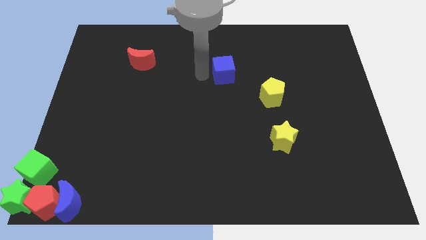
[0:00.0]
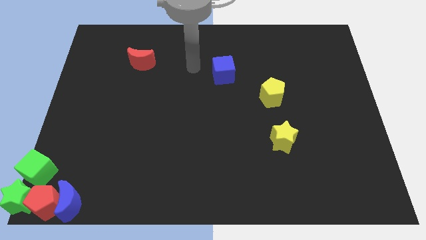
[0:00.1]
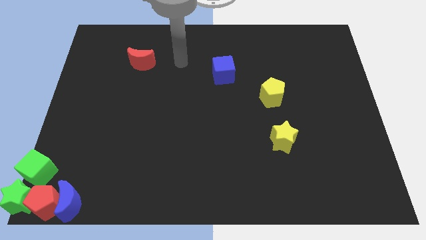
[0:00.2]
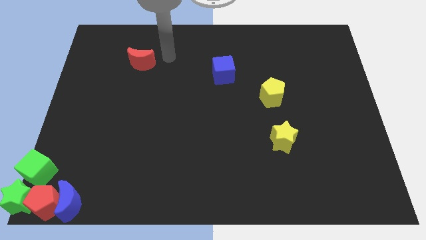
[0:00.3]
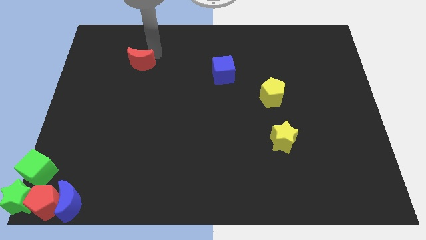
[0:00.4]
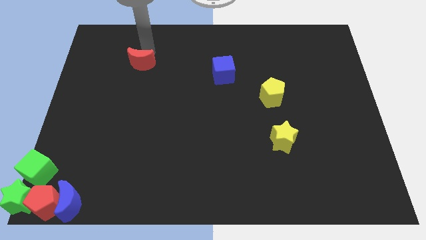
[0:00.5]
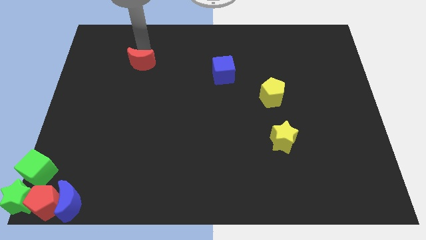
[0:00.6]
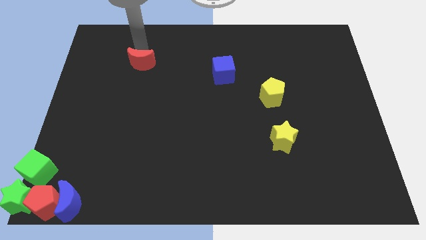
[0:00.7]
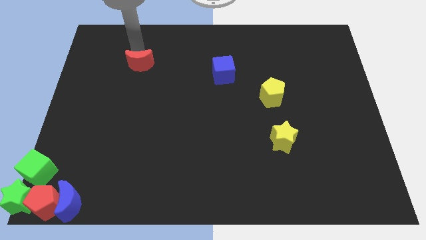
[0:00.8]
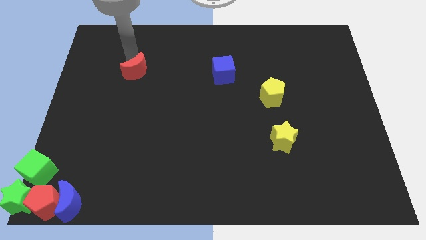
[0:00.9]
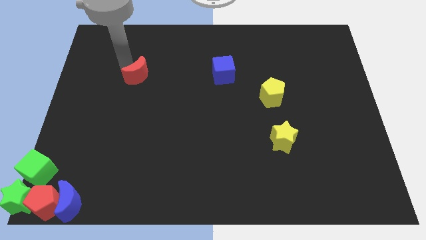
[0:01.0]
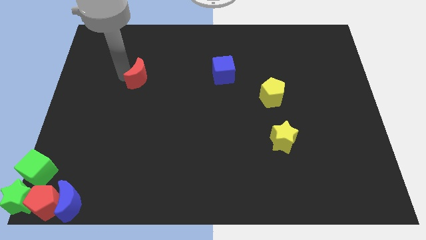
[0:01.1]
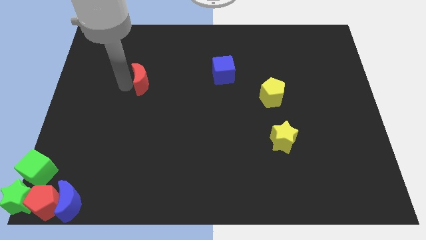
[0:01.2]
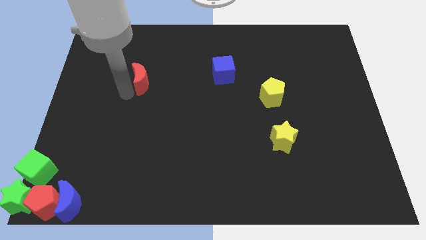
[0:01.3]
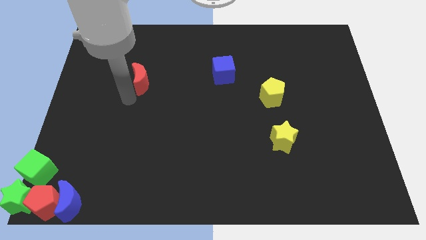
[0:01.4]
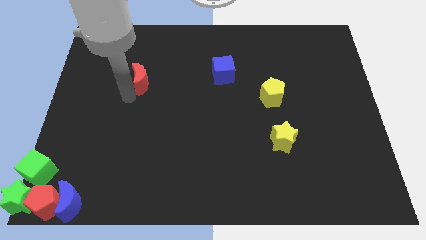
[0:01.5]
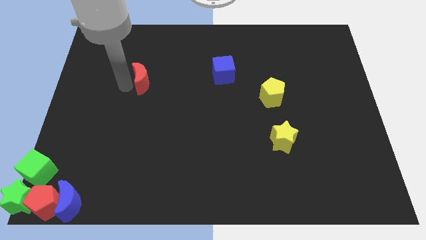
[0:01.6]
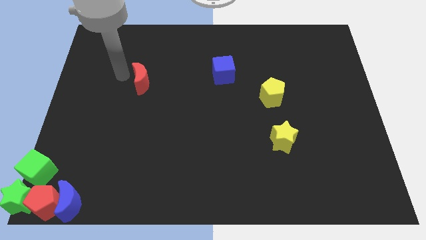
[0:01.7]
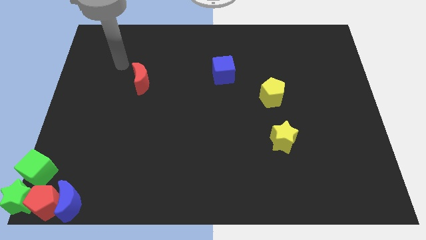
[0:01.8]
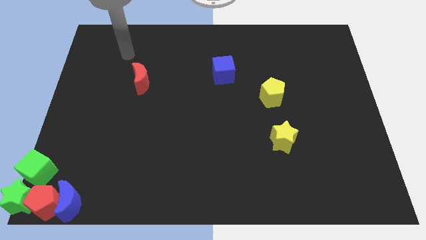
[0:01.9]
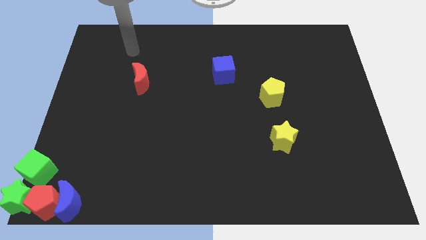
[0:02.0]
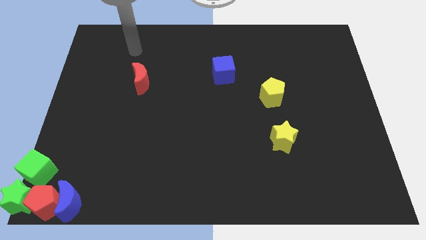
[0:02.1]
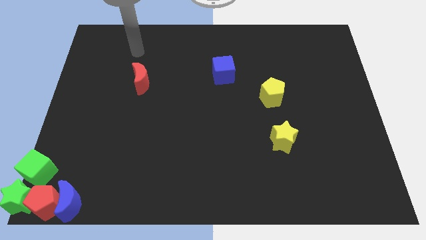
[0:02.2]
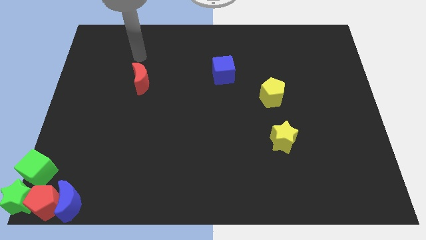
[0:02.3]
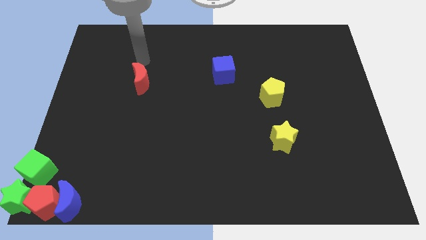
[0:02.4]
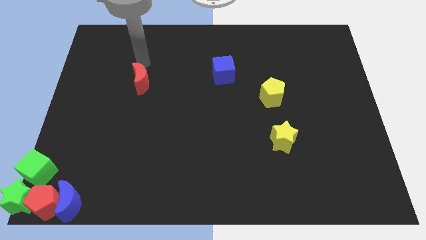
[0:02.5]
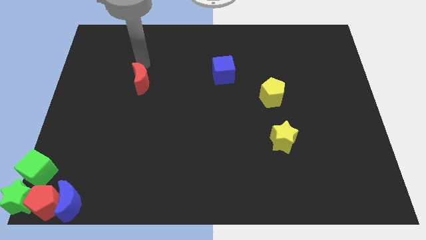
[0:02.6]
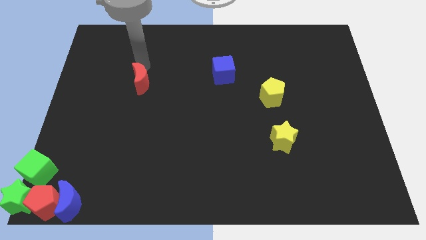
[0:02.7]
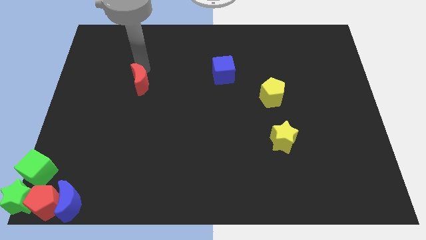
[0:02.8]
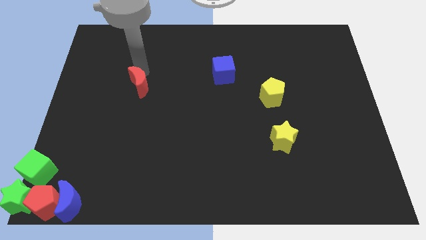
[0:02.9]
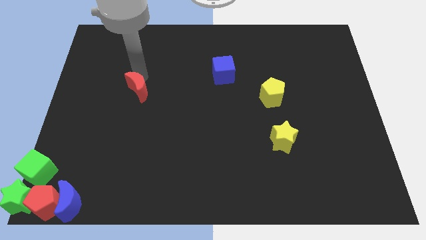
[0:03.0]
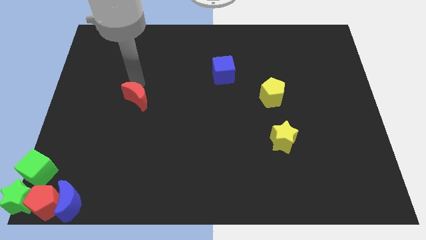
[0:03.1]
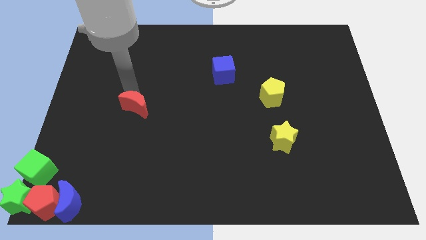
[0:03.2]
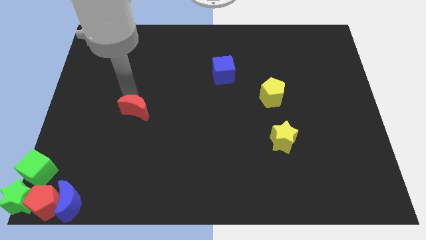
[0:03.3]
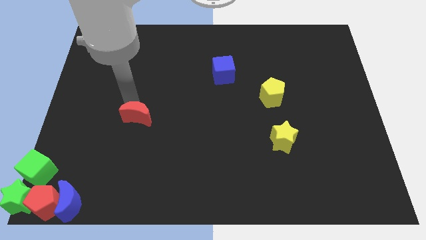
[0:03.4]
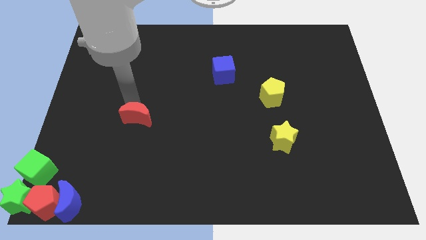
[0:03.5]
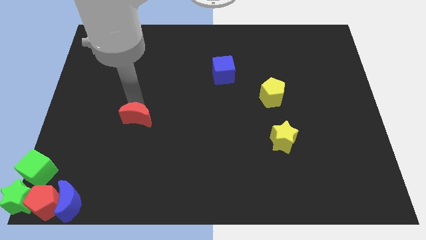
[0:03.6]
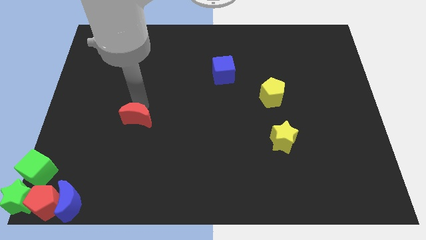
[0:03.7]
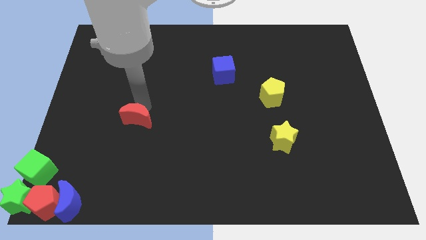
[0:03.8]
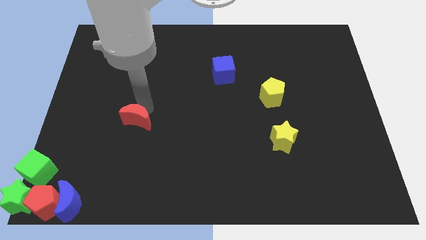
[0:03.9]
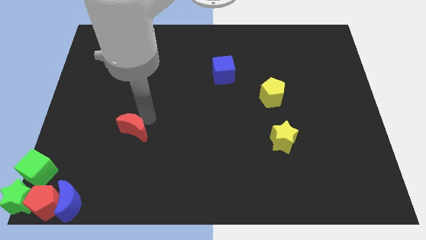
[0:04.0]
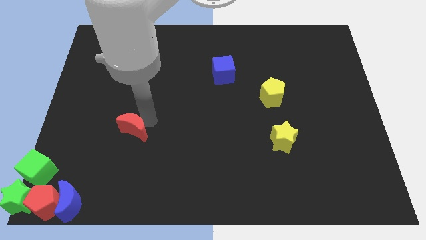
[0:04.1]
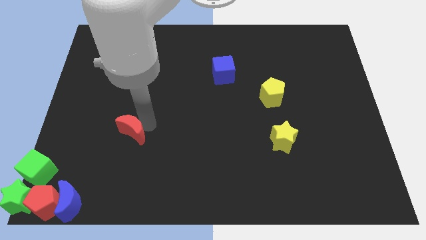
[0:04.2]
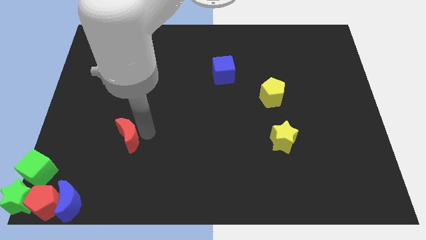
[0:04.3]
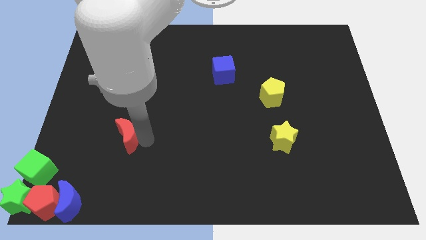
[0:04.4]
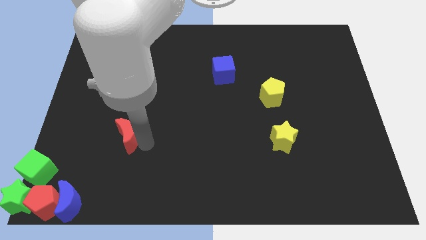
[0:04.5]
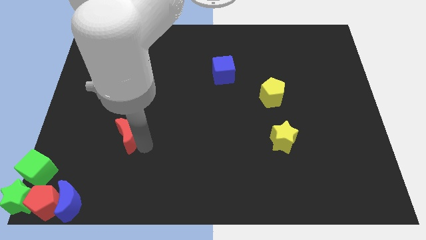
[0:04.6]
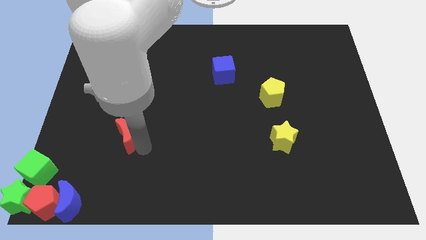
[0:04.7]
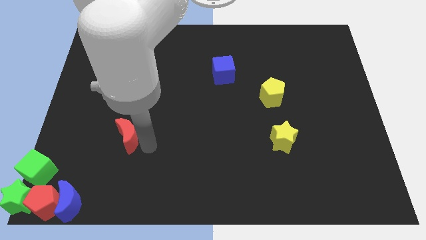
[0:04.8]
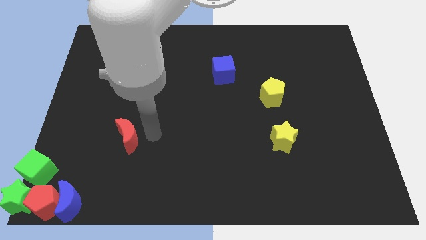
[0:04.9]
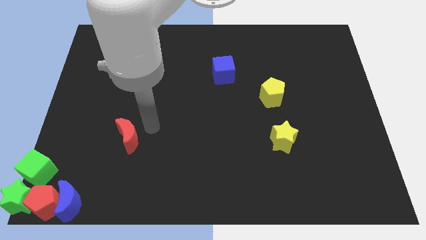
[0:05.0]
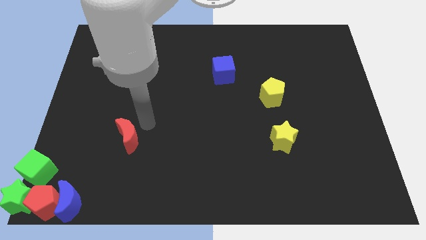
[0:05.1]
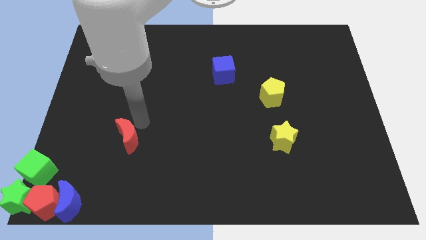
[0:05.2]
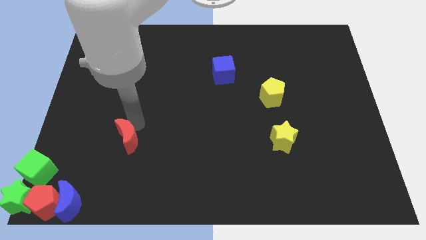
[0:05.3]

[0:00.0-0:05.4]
push the red moon downward

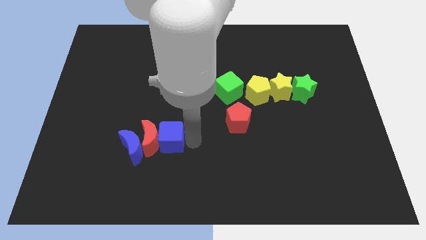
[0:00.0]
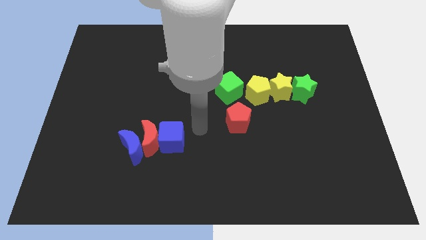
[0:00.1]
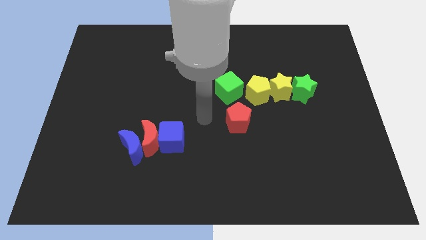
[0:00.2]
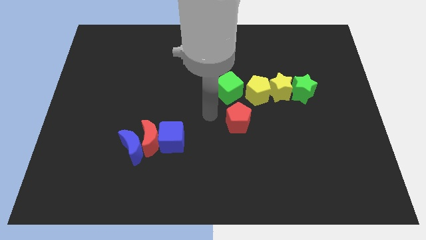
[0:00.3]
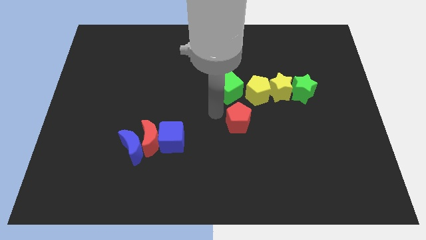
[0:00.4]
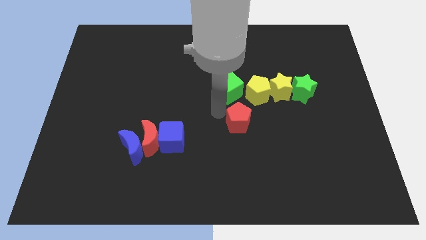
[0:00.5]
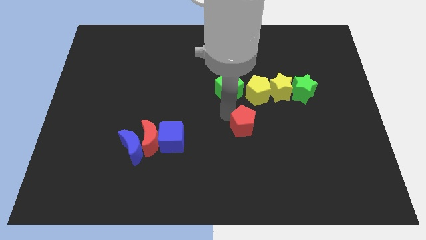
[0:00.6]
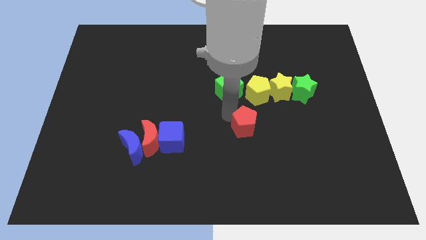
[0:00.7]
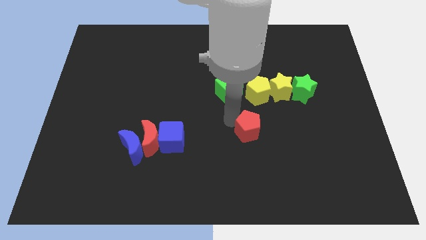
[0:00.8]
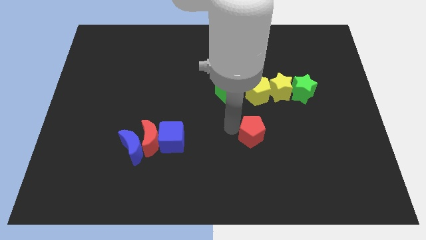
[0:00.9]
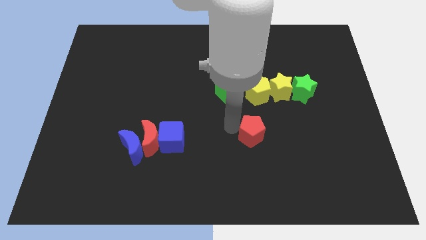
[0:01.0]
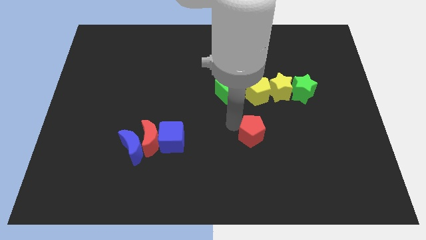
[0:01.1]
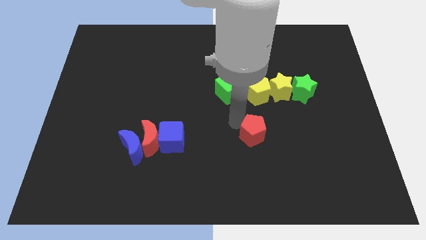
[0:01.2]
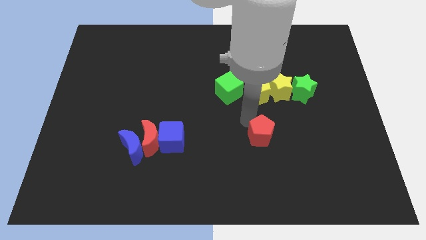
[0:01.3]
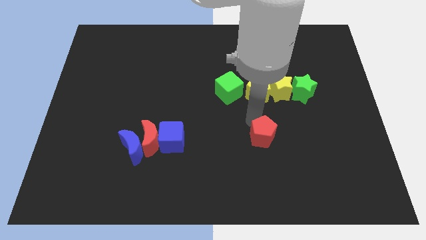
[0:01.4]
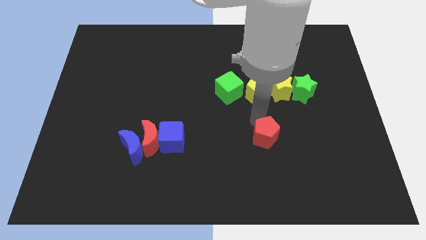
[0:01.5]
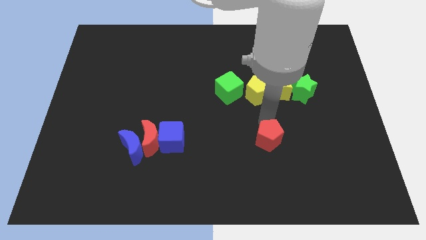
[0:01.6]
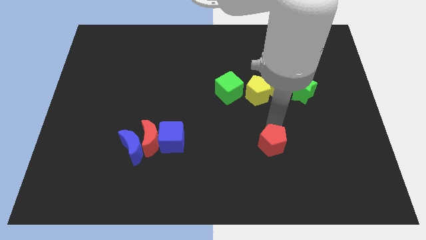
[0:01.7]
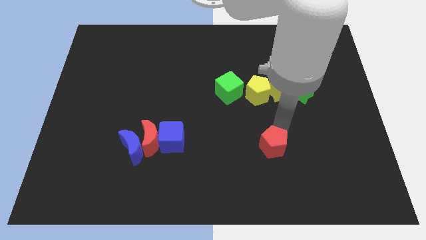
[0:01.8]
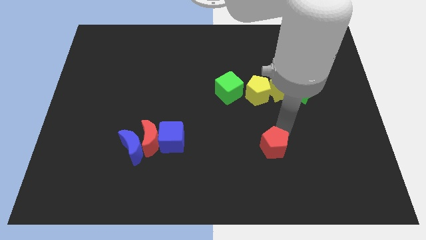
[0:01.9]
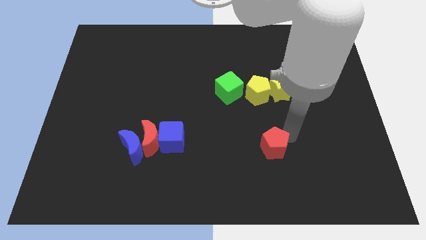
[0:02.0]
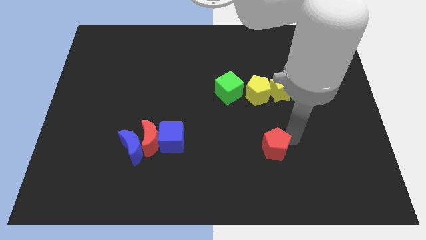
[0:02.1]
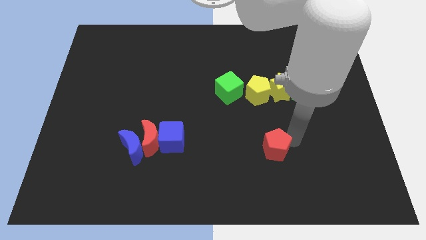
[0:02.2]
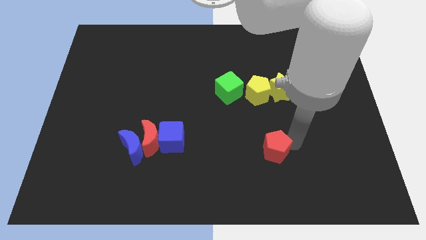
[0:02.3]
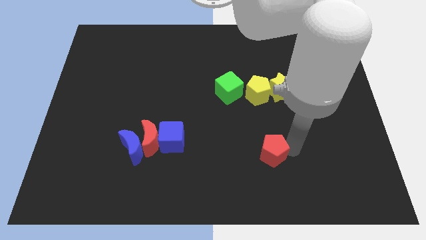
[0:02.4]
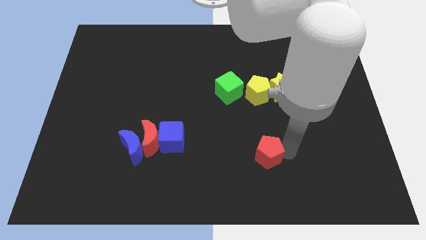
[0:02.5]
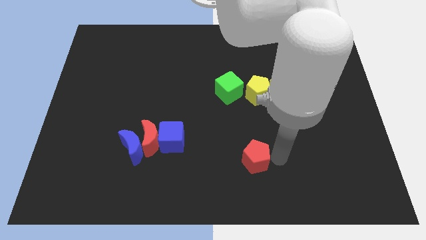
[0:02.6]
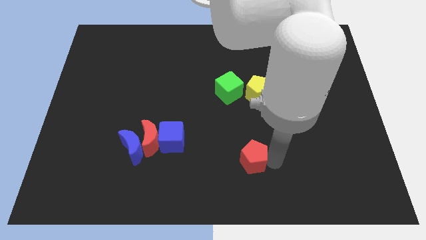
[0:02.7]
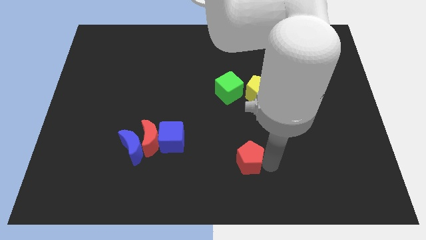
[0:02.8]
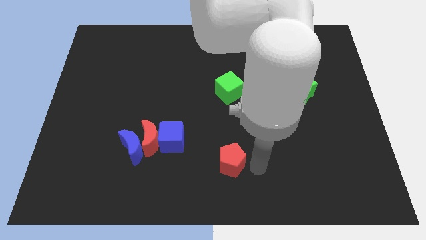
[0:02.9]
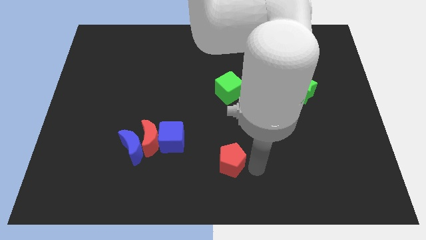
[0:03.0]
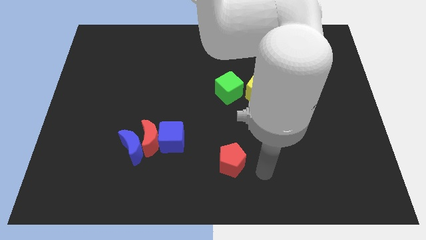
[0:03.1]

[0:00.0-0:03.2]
move the red pentagon towards the bottom center

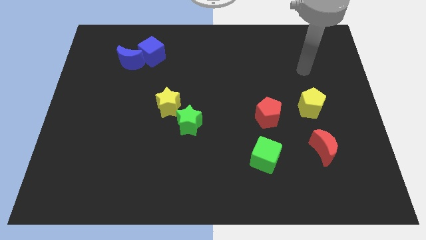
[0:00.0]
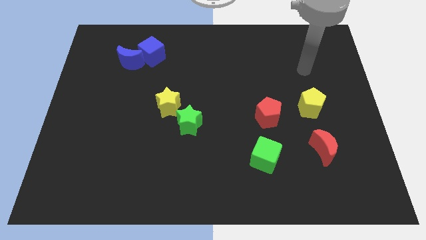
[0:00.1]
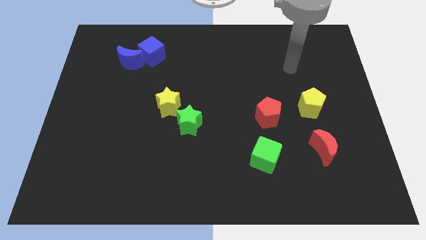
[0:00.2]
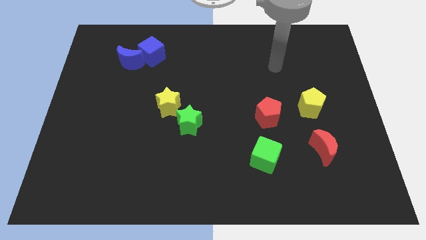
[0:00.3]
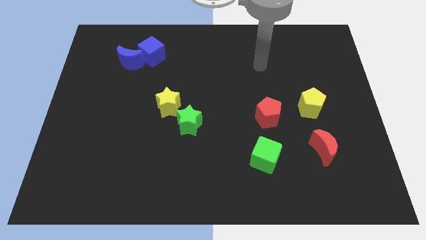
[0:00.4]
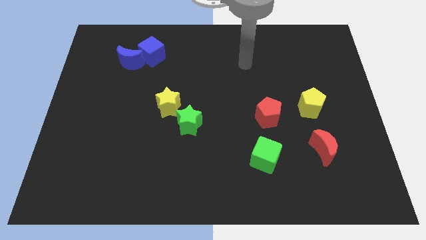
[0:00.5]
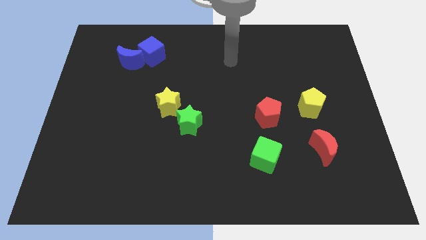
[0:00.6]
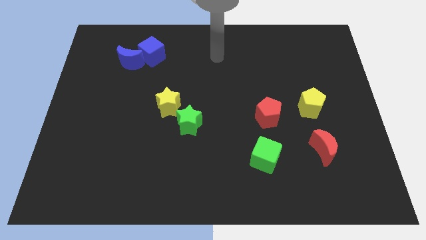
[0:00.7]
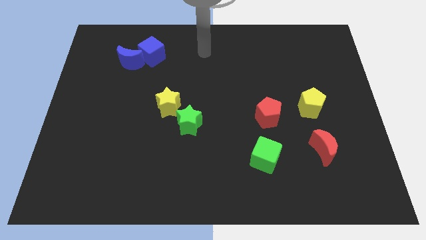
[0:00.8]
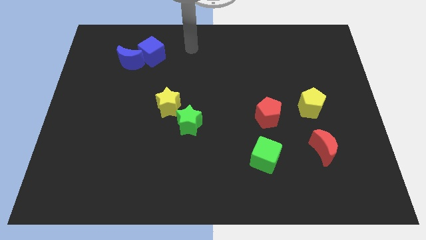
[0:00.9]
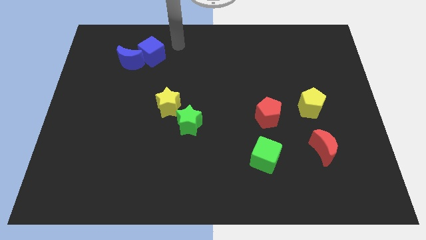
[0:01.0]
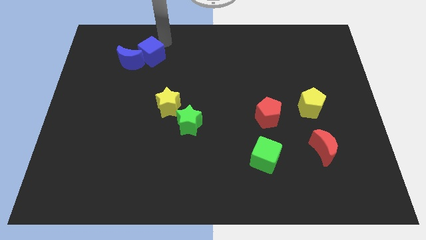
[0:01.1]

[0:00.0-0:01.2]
place your arm at the top of the blue cube
